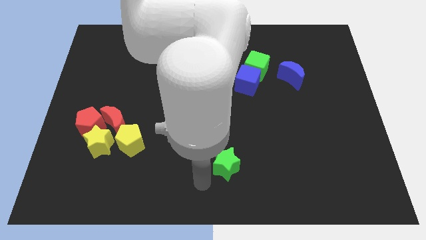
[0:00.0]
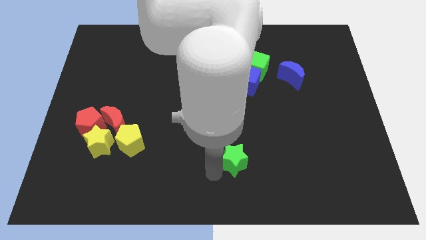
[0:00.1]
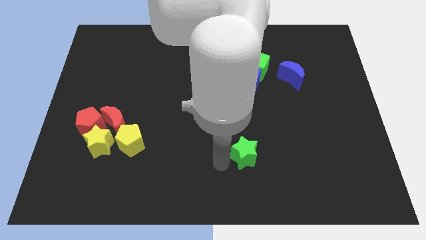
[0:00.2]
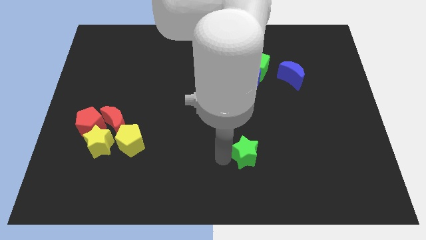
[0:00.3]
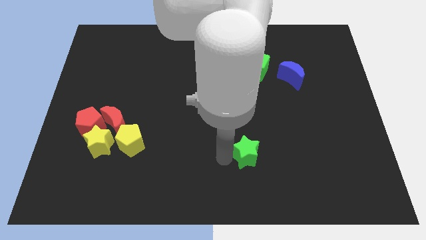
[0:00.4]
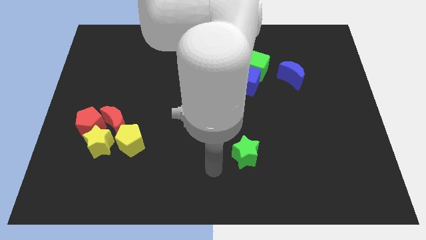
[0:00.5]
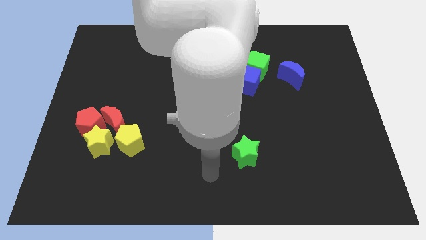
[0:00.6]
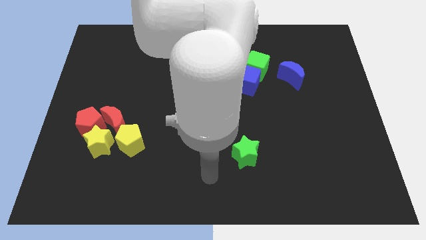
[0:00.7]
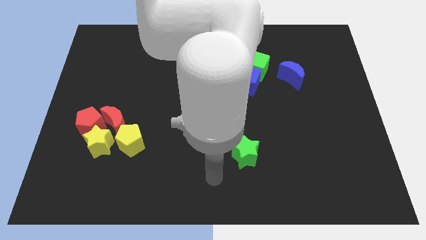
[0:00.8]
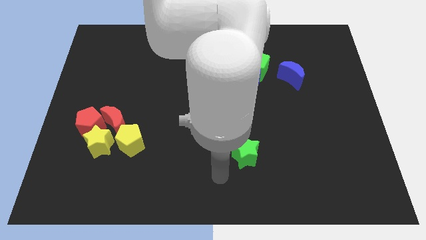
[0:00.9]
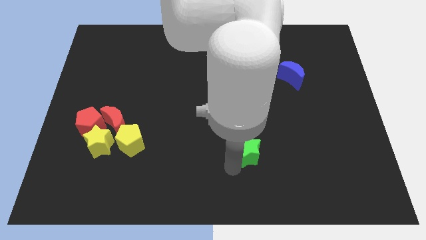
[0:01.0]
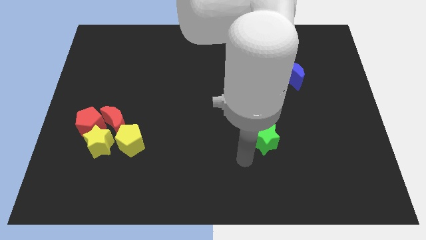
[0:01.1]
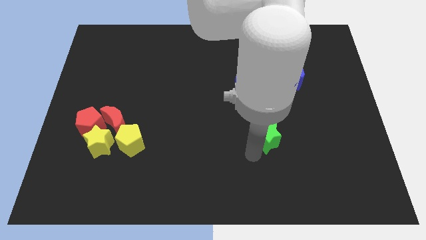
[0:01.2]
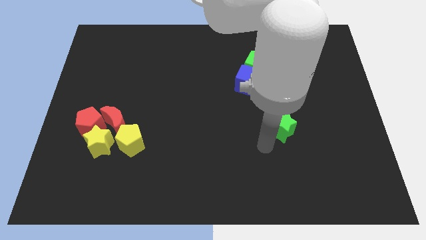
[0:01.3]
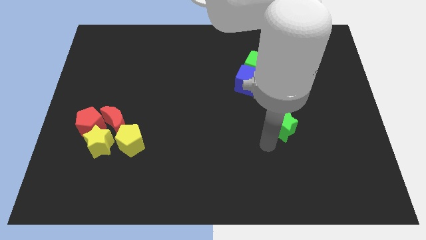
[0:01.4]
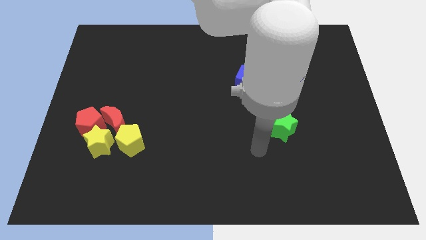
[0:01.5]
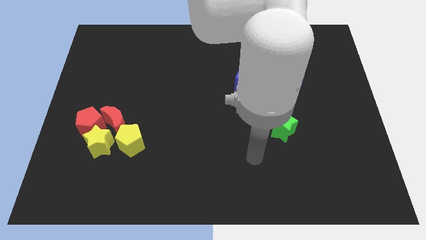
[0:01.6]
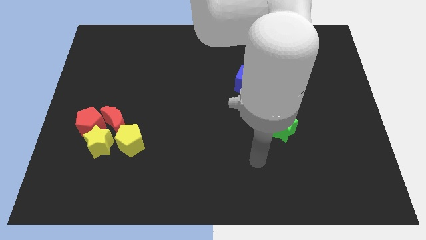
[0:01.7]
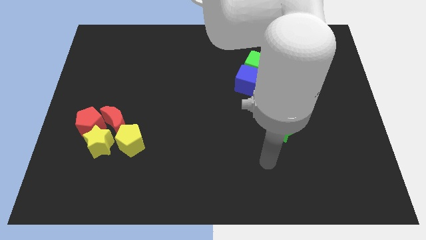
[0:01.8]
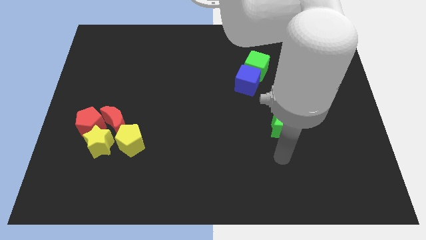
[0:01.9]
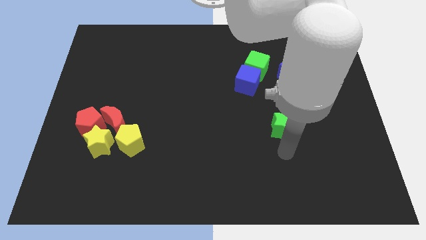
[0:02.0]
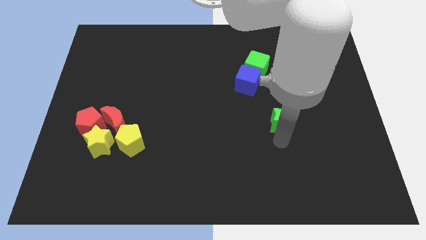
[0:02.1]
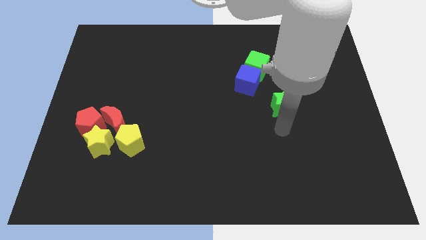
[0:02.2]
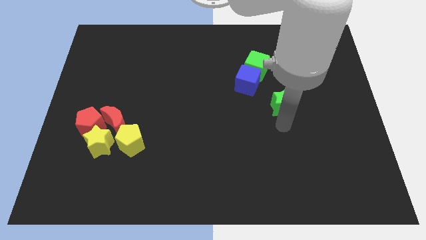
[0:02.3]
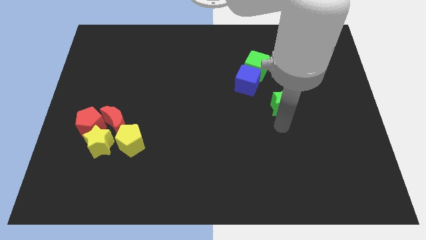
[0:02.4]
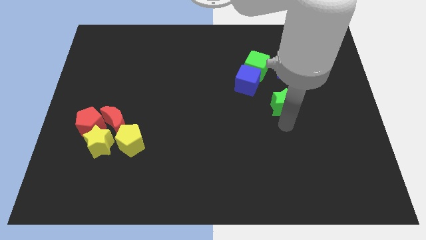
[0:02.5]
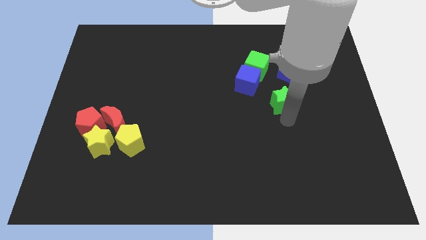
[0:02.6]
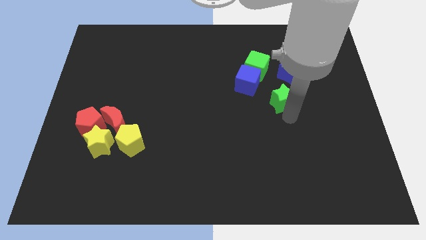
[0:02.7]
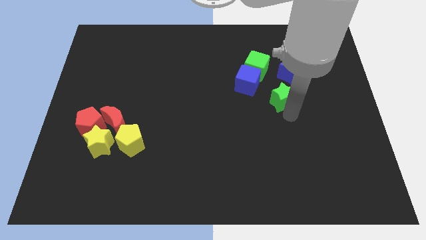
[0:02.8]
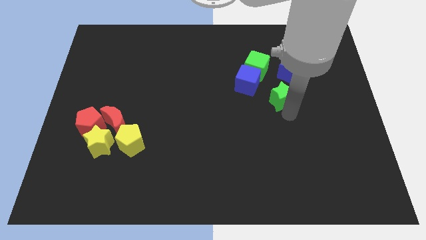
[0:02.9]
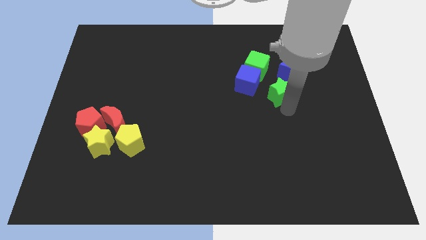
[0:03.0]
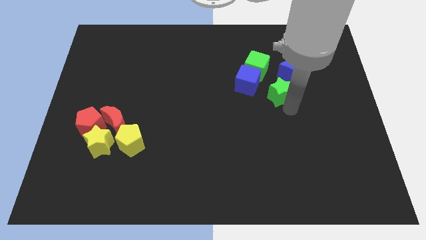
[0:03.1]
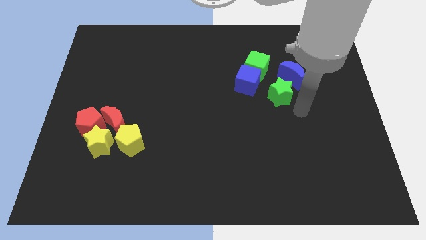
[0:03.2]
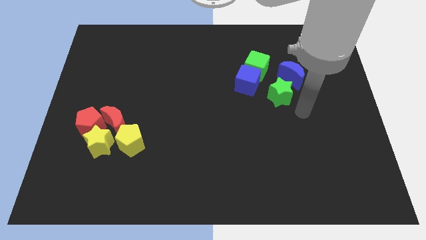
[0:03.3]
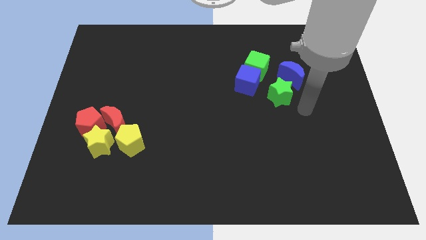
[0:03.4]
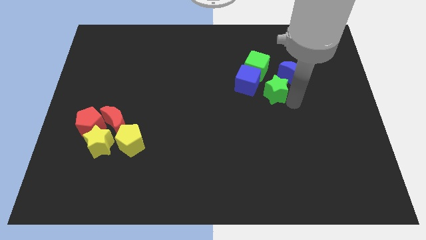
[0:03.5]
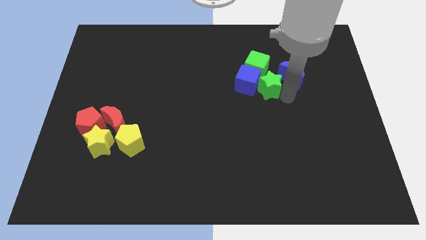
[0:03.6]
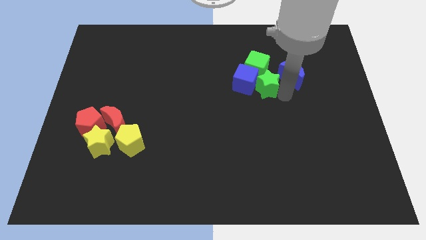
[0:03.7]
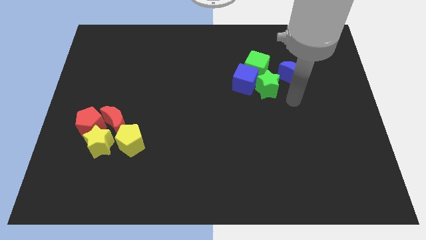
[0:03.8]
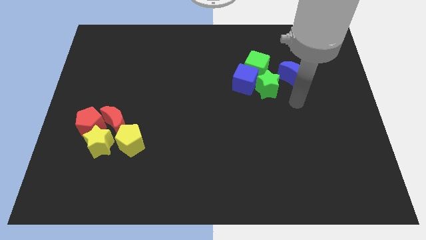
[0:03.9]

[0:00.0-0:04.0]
push the green star towards the bottom of the green cube

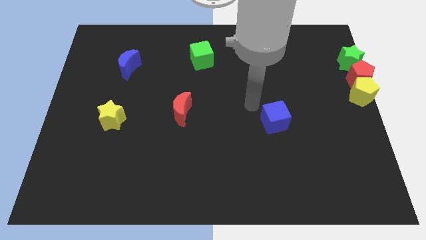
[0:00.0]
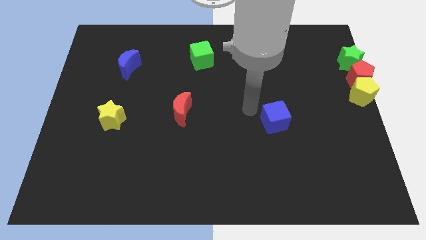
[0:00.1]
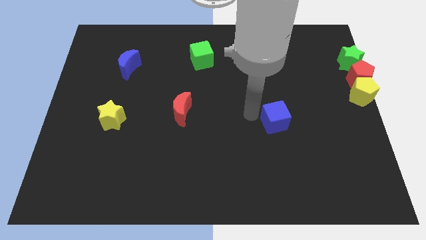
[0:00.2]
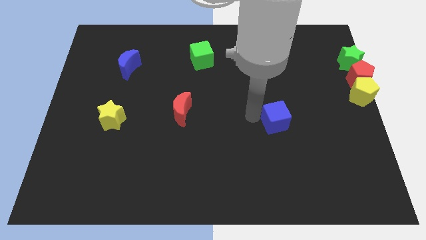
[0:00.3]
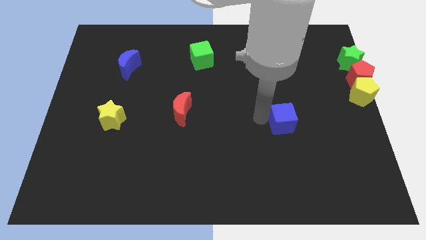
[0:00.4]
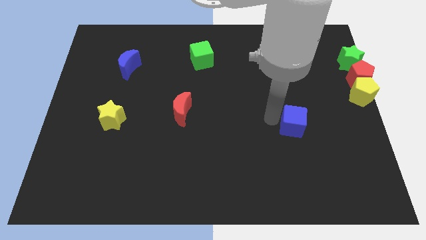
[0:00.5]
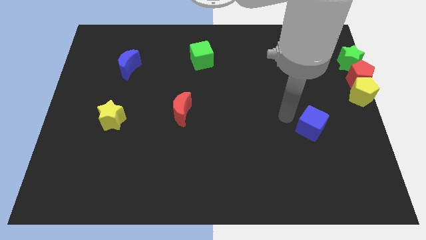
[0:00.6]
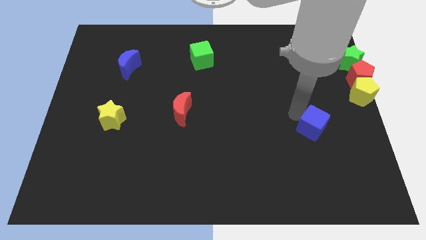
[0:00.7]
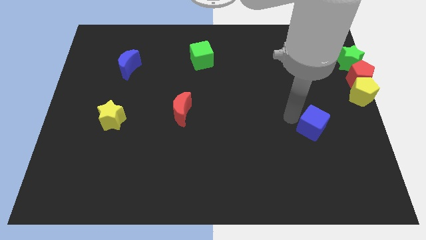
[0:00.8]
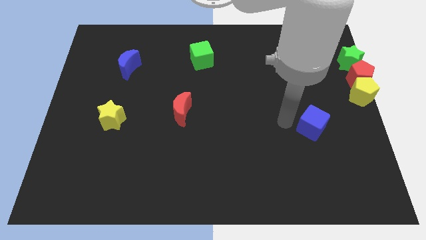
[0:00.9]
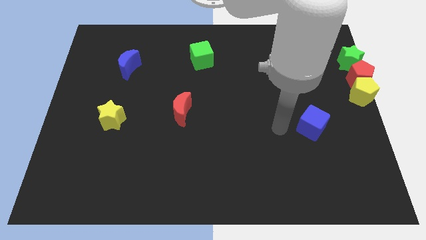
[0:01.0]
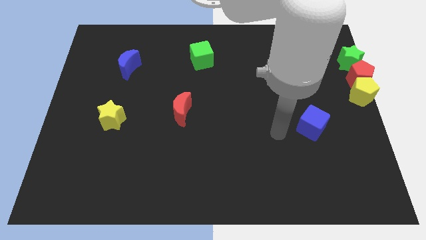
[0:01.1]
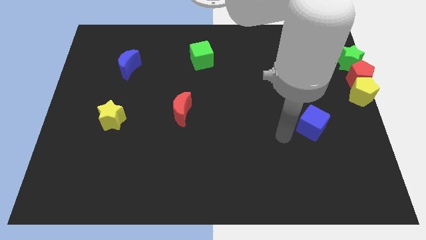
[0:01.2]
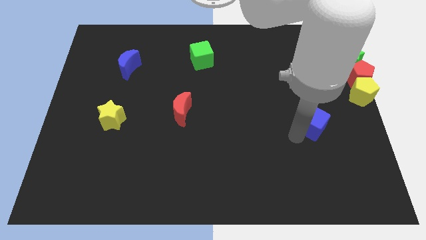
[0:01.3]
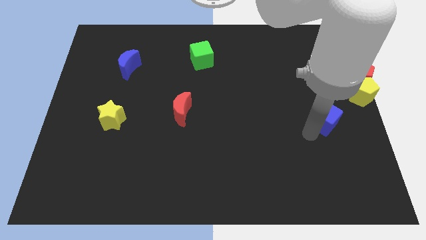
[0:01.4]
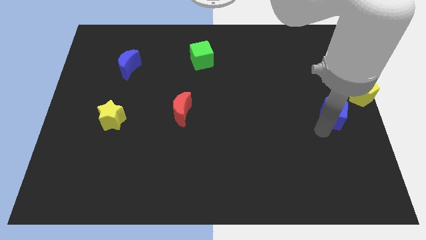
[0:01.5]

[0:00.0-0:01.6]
place the blue cube diagonally to the yellow pentagon

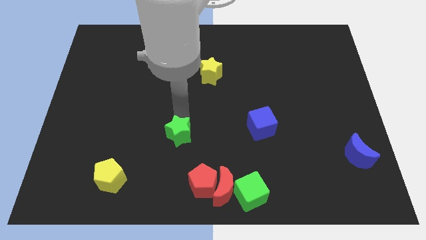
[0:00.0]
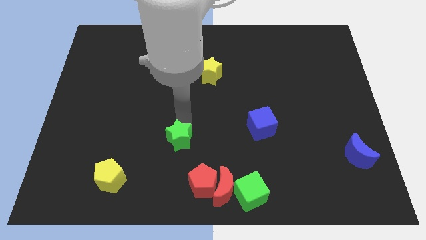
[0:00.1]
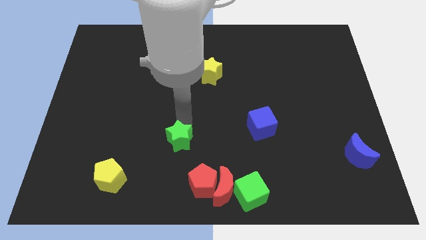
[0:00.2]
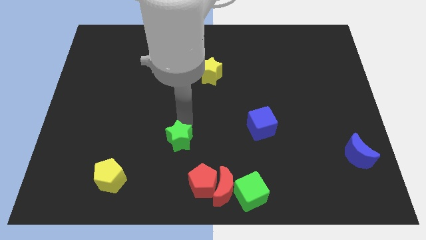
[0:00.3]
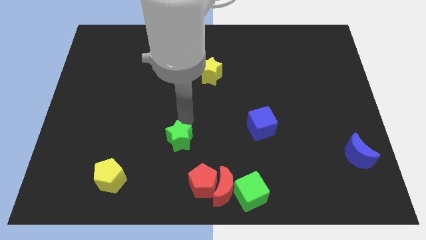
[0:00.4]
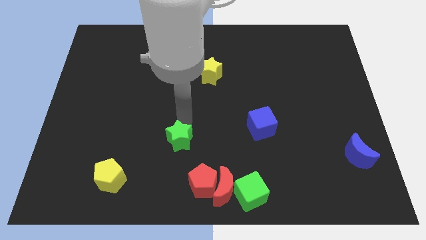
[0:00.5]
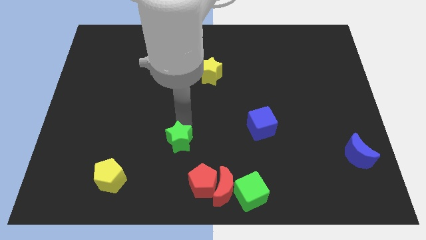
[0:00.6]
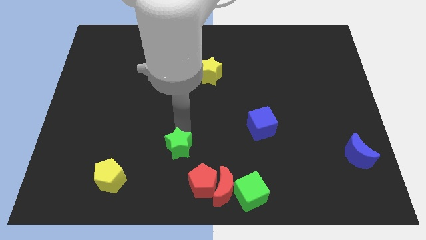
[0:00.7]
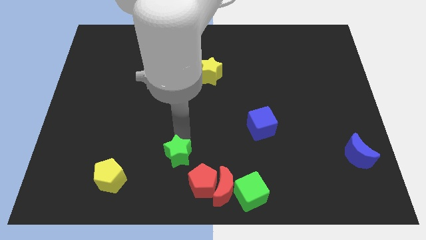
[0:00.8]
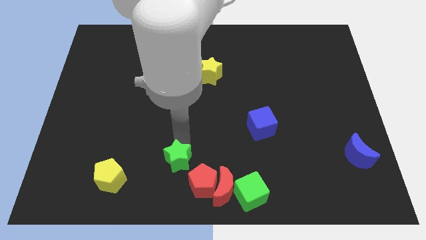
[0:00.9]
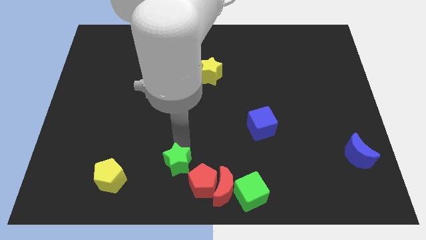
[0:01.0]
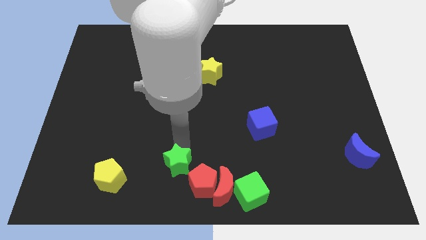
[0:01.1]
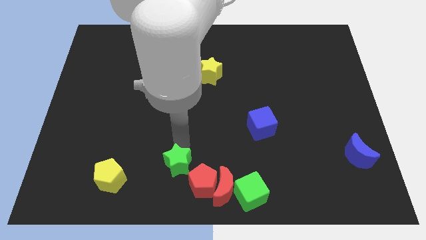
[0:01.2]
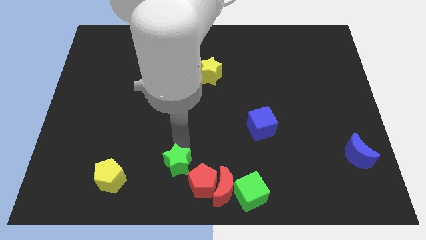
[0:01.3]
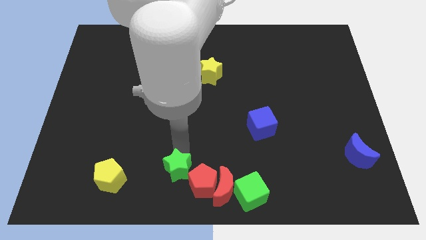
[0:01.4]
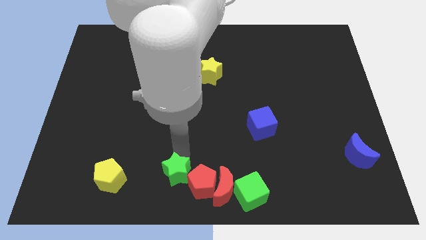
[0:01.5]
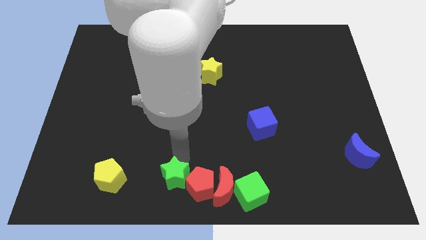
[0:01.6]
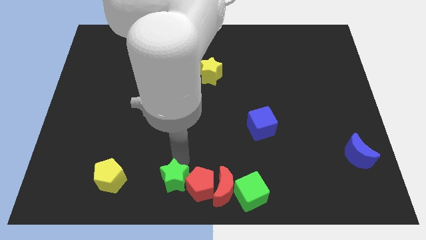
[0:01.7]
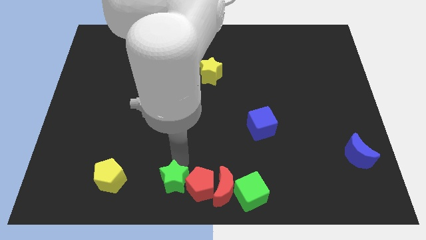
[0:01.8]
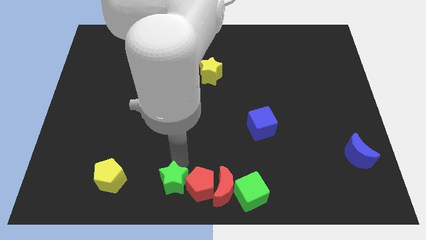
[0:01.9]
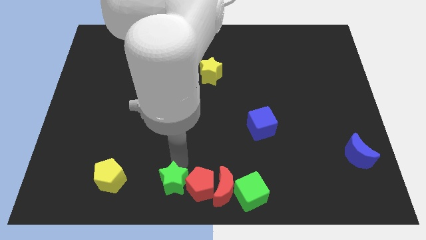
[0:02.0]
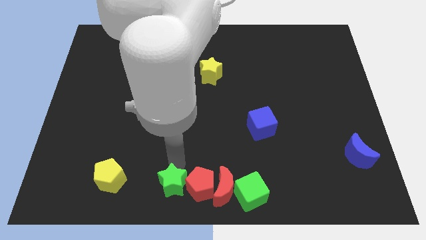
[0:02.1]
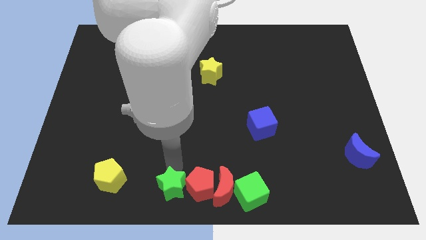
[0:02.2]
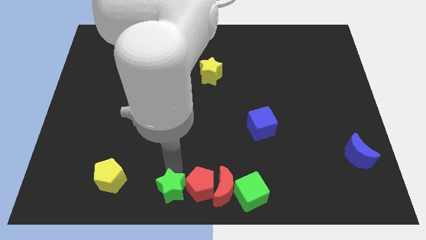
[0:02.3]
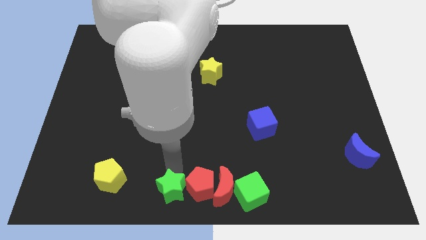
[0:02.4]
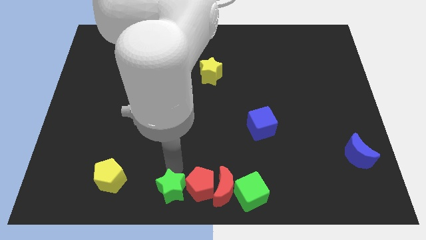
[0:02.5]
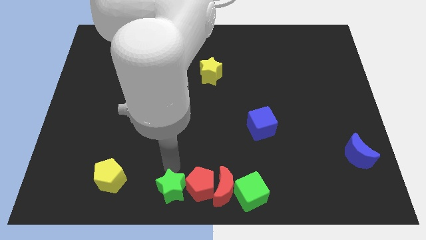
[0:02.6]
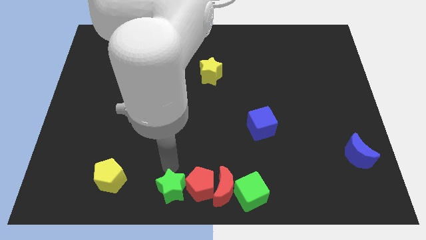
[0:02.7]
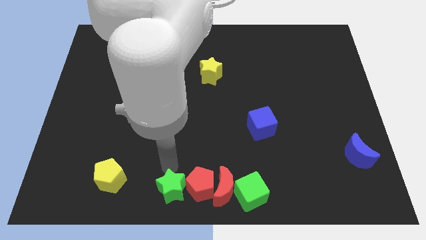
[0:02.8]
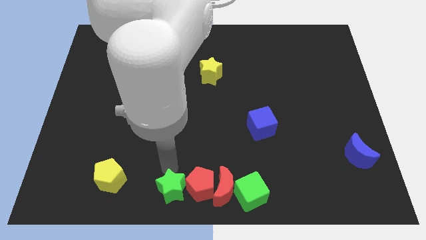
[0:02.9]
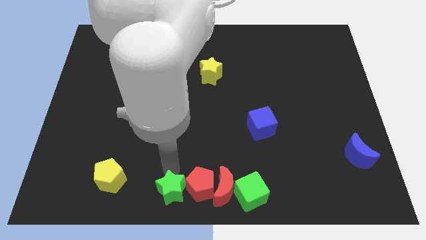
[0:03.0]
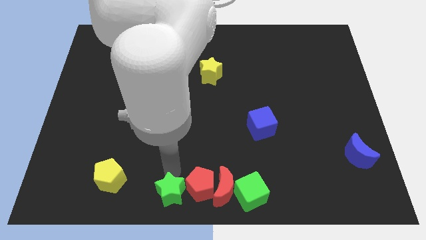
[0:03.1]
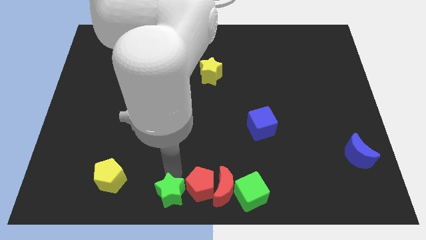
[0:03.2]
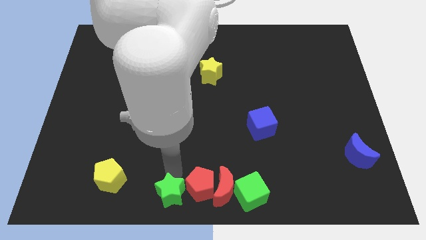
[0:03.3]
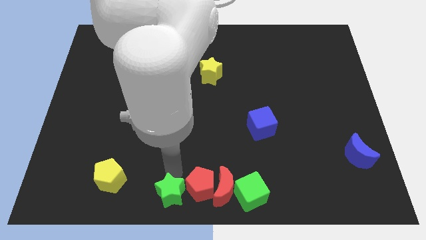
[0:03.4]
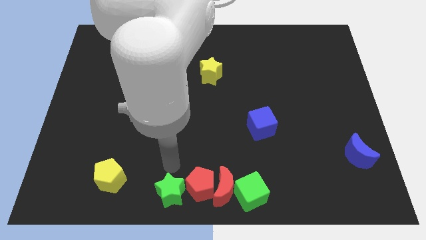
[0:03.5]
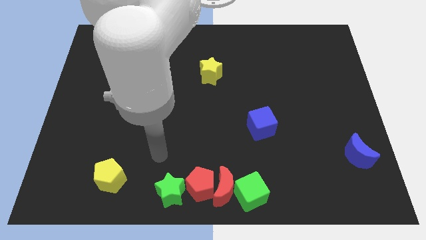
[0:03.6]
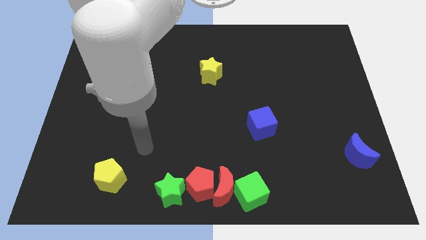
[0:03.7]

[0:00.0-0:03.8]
place the green star to the left side of the red pentagon to form a horizontal line
